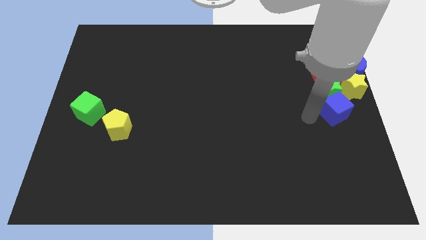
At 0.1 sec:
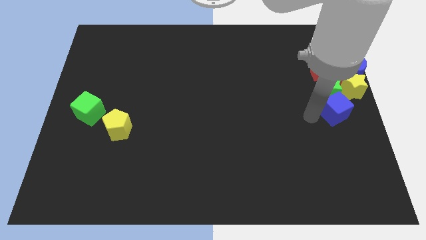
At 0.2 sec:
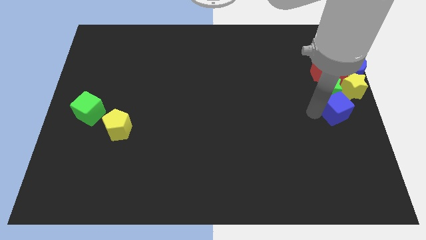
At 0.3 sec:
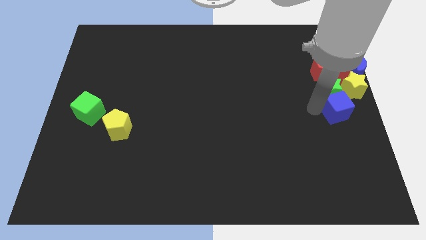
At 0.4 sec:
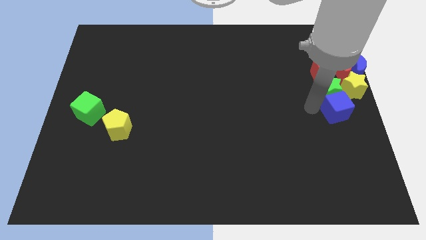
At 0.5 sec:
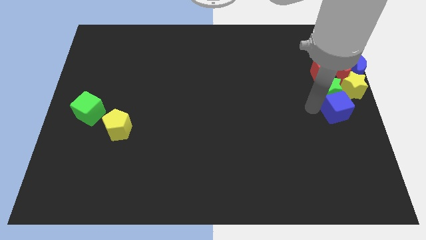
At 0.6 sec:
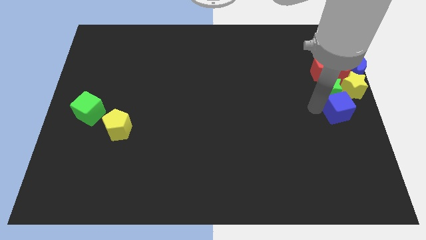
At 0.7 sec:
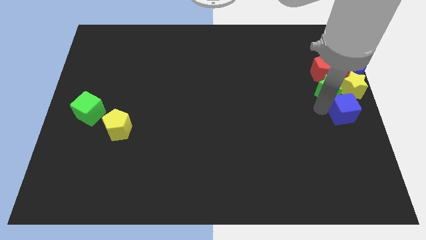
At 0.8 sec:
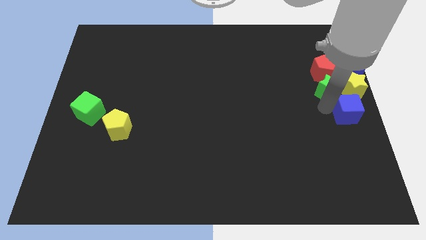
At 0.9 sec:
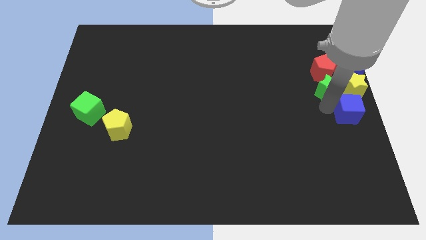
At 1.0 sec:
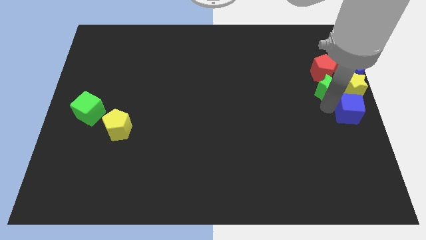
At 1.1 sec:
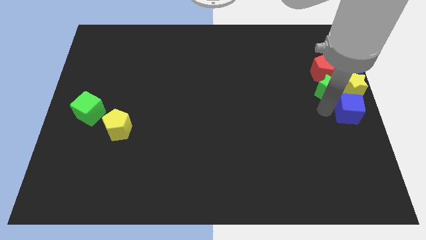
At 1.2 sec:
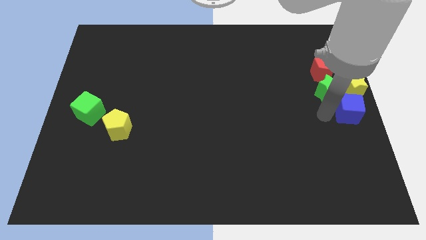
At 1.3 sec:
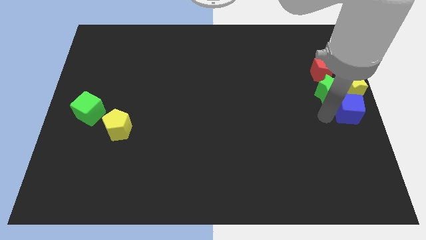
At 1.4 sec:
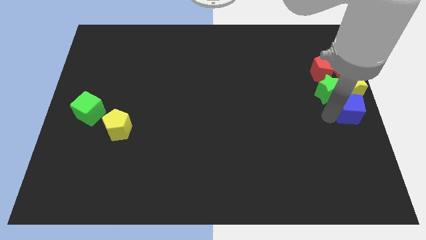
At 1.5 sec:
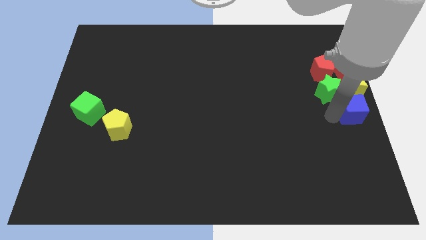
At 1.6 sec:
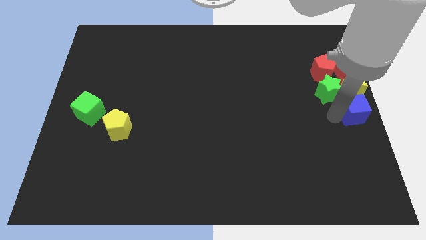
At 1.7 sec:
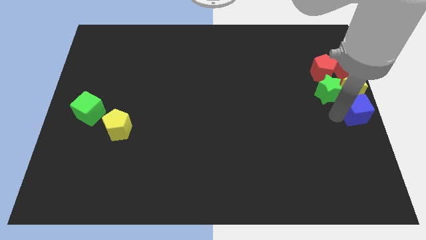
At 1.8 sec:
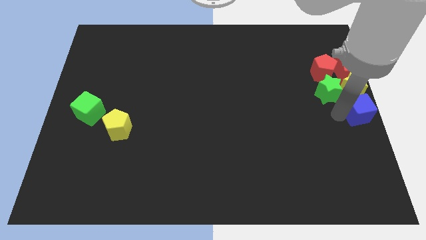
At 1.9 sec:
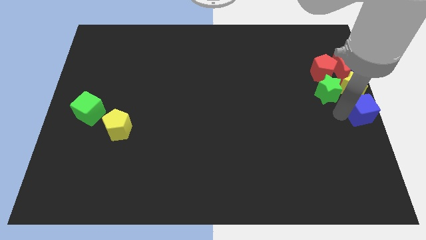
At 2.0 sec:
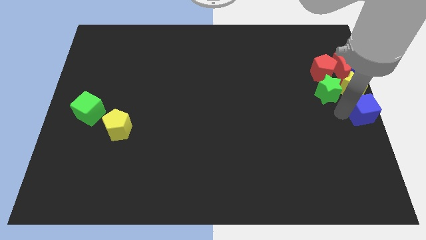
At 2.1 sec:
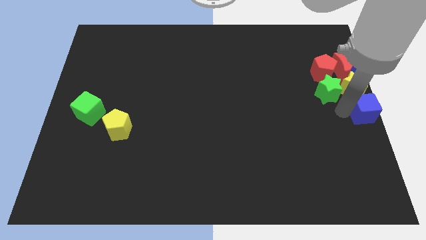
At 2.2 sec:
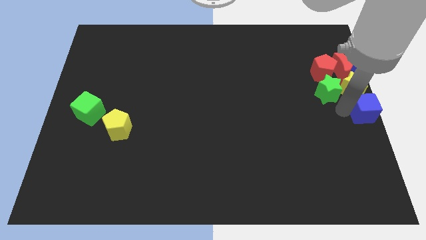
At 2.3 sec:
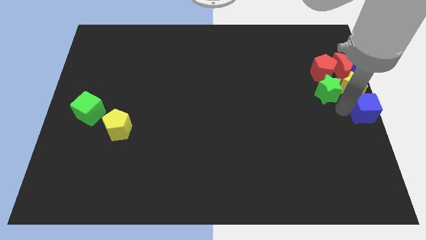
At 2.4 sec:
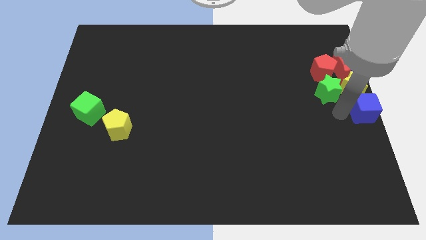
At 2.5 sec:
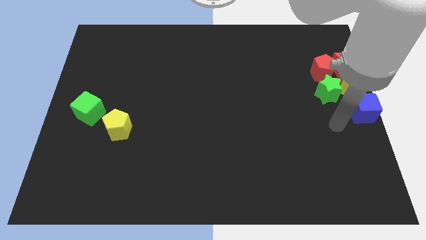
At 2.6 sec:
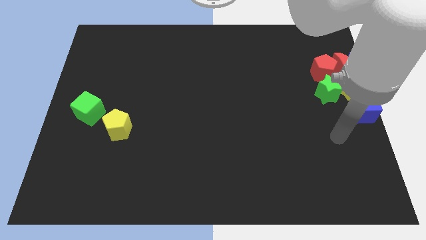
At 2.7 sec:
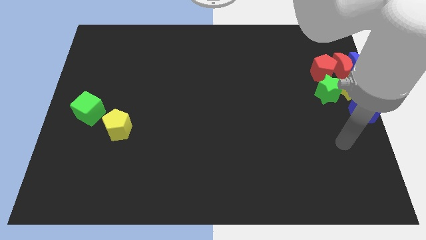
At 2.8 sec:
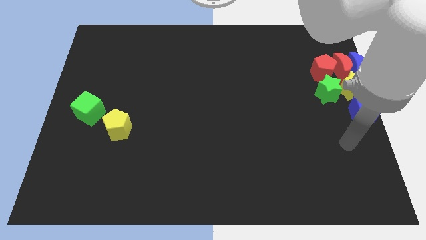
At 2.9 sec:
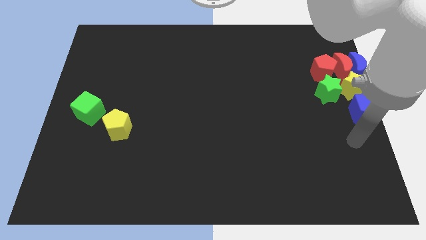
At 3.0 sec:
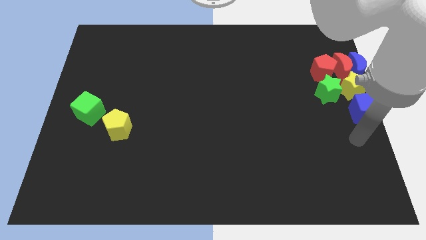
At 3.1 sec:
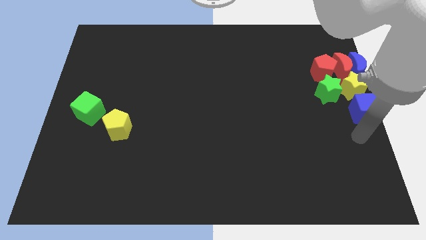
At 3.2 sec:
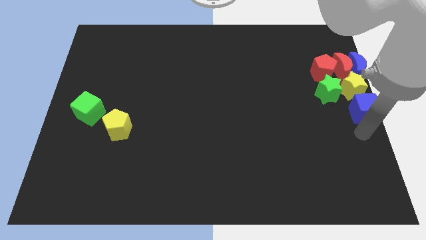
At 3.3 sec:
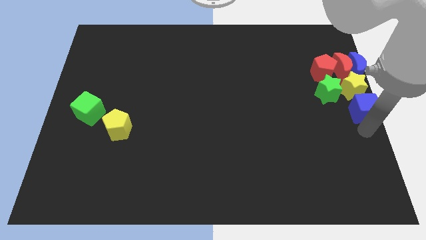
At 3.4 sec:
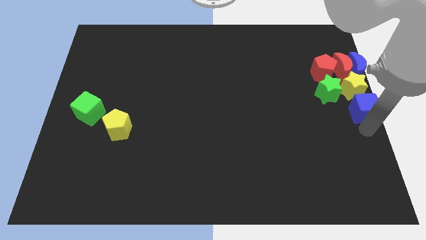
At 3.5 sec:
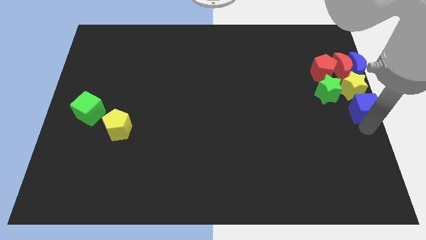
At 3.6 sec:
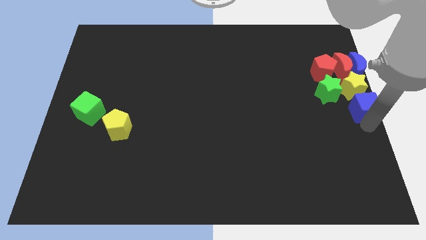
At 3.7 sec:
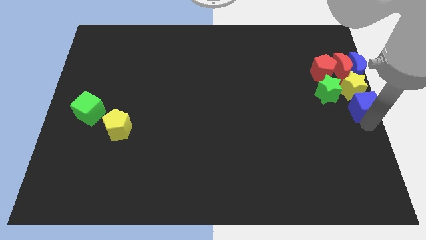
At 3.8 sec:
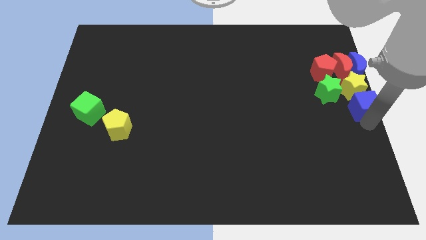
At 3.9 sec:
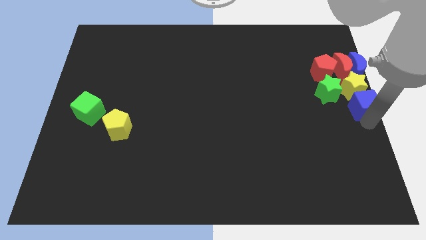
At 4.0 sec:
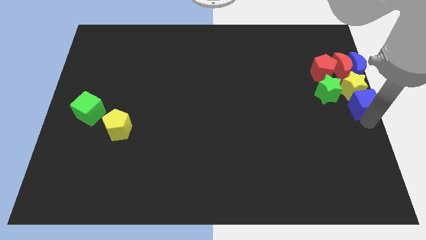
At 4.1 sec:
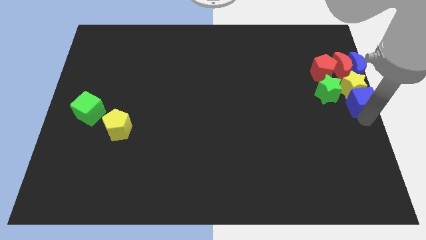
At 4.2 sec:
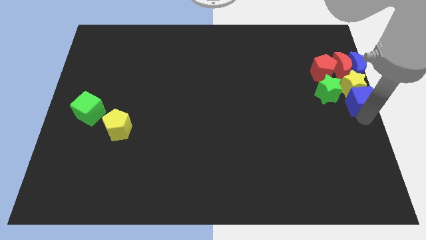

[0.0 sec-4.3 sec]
move the blue cube into the bottom of the yellow star

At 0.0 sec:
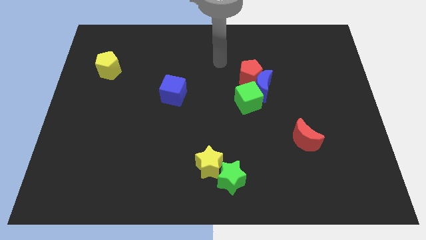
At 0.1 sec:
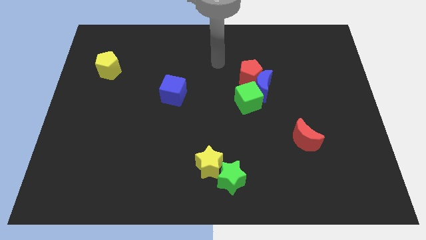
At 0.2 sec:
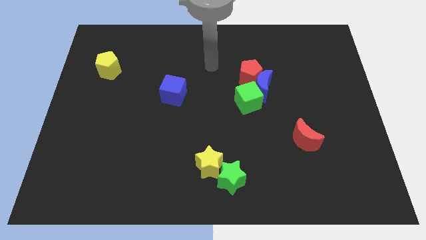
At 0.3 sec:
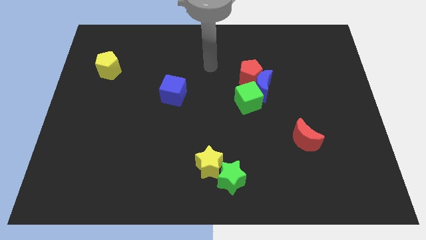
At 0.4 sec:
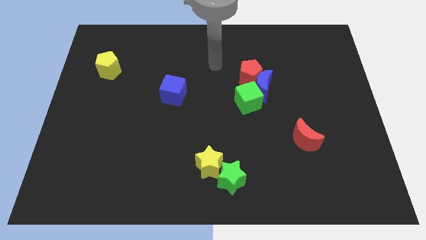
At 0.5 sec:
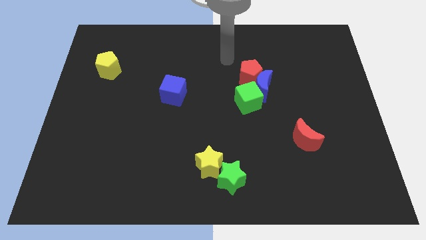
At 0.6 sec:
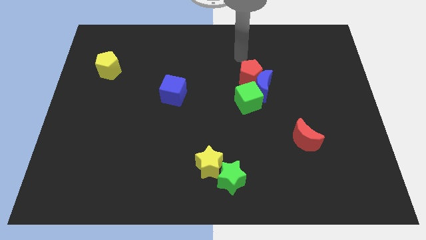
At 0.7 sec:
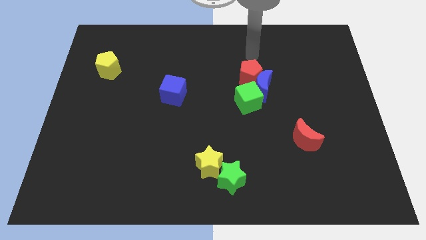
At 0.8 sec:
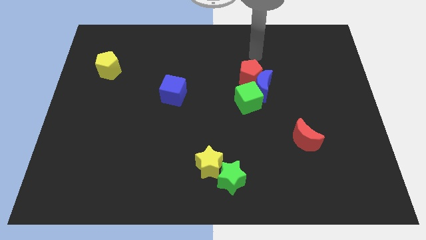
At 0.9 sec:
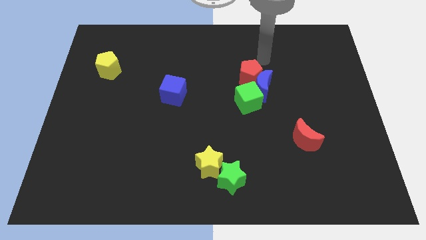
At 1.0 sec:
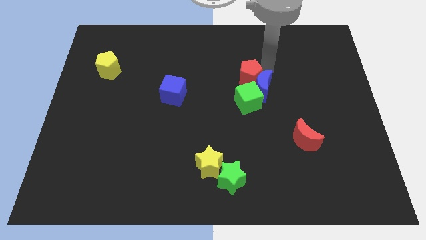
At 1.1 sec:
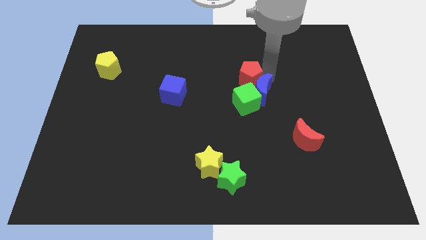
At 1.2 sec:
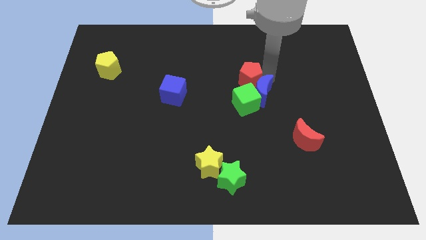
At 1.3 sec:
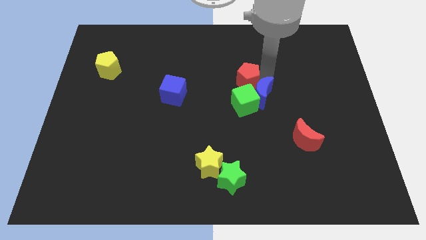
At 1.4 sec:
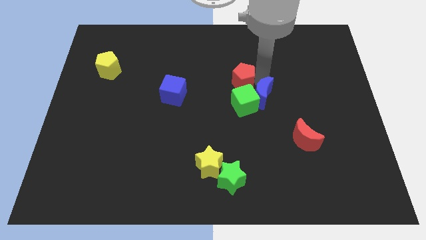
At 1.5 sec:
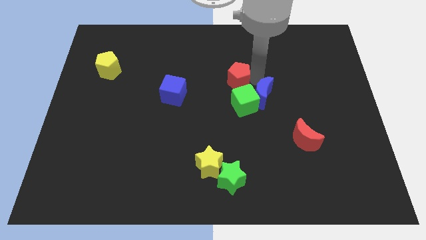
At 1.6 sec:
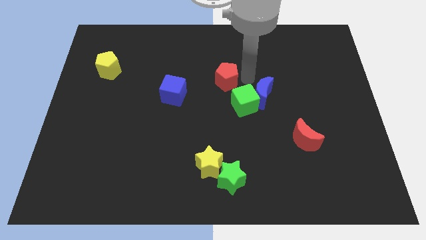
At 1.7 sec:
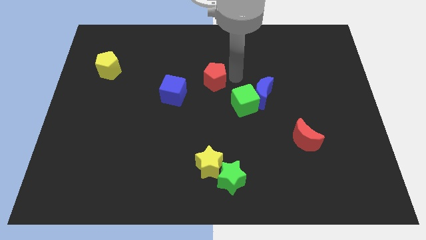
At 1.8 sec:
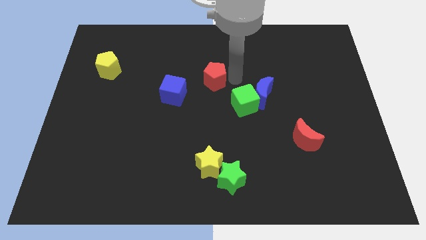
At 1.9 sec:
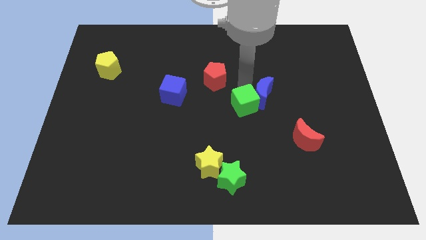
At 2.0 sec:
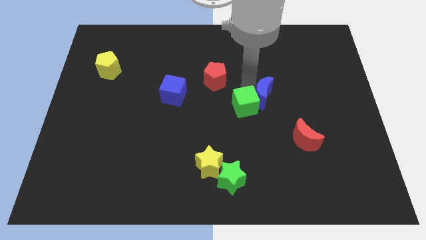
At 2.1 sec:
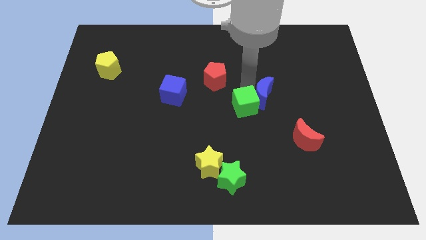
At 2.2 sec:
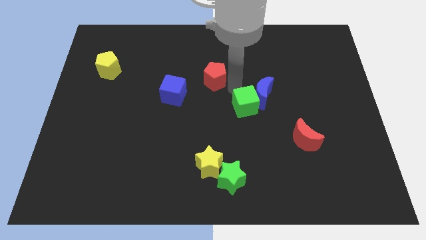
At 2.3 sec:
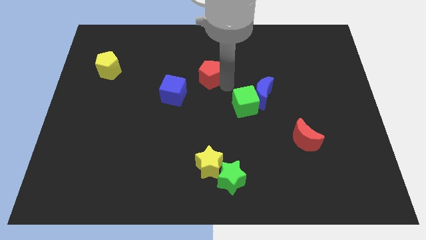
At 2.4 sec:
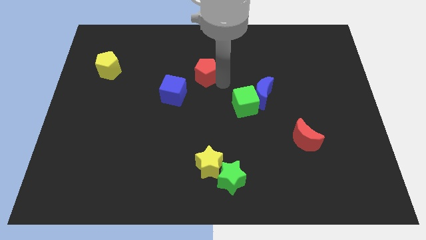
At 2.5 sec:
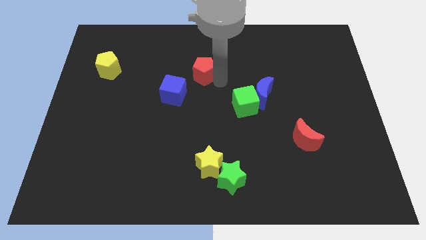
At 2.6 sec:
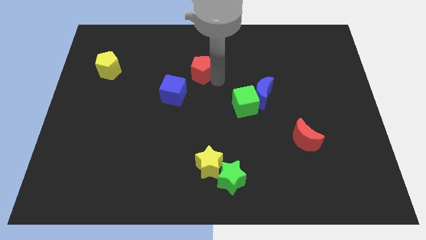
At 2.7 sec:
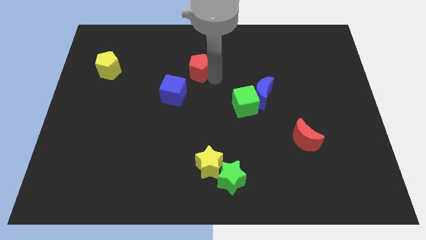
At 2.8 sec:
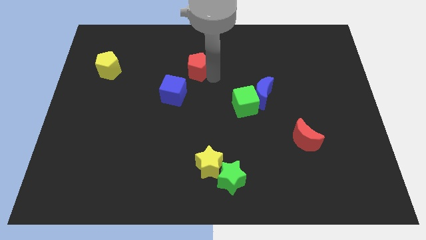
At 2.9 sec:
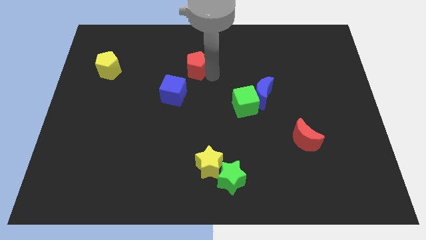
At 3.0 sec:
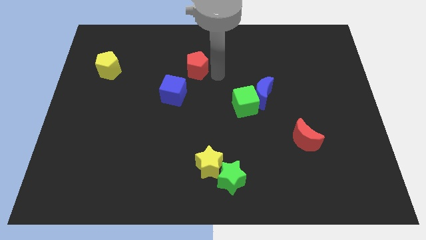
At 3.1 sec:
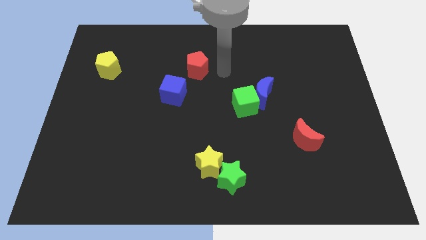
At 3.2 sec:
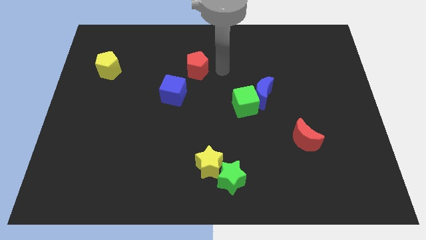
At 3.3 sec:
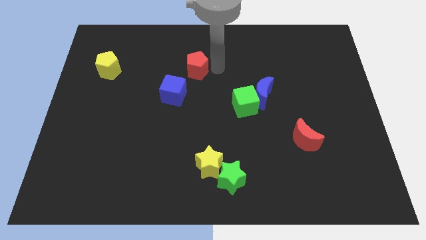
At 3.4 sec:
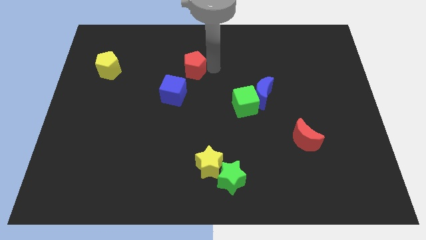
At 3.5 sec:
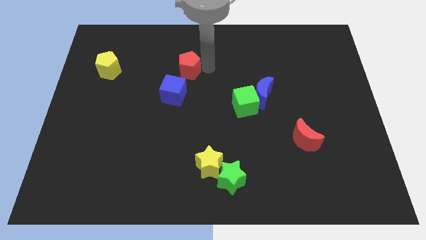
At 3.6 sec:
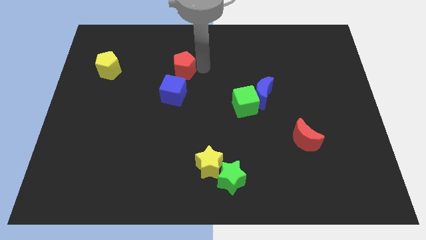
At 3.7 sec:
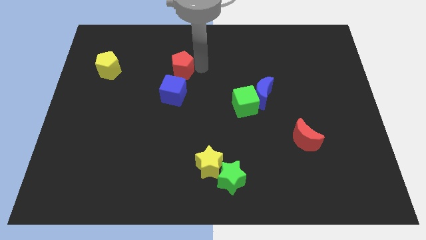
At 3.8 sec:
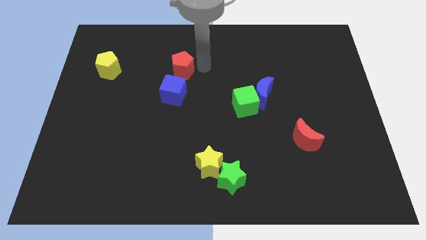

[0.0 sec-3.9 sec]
move the red pentagon horizontally to the right side of the yellow pentagon

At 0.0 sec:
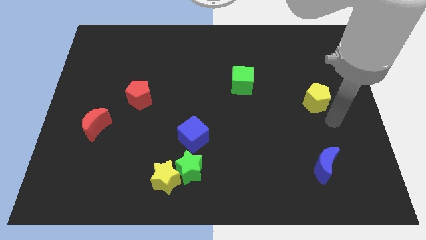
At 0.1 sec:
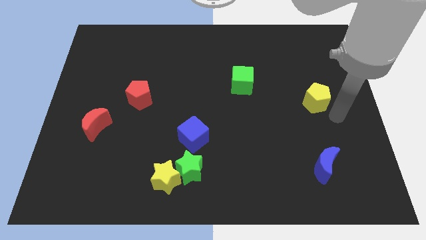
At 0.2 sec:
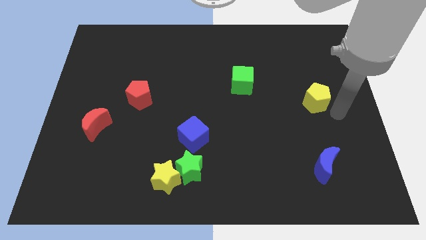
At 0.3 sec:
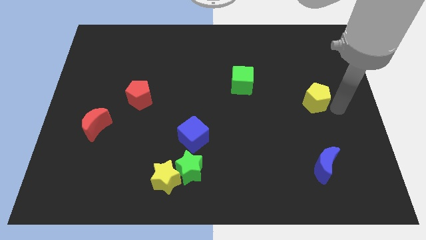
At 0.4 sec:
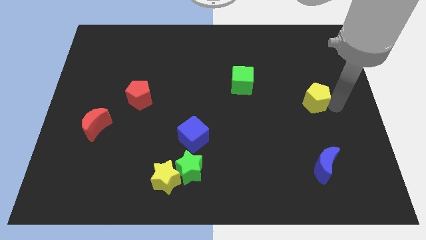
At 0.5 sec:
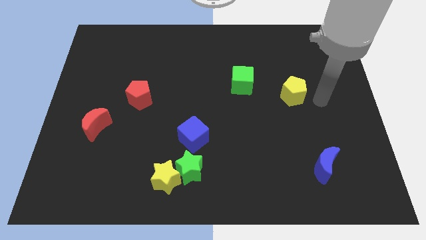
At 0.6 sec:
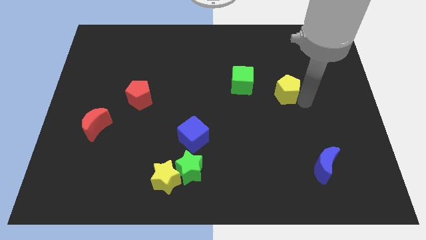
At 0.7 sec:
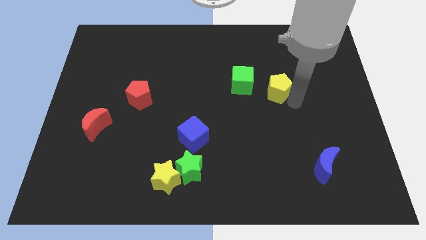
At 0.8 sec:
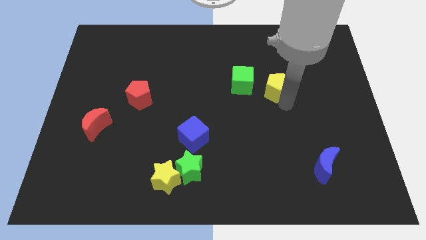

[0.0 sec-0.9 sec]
push the yellow pentagon towards the green cube
